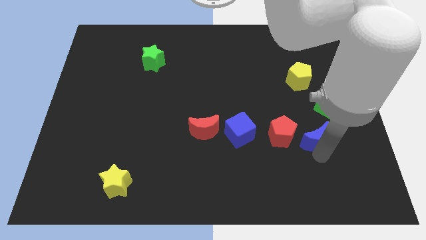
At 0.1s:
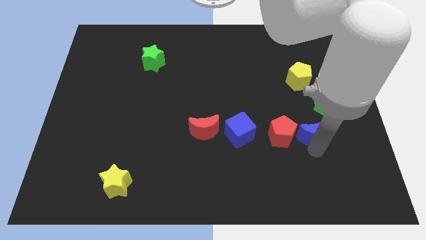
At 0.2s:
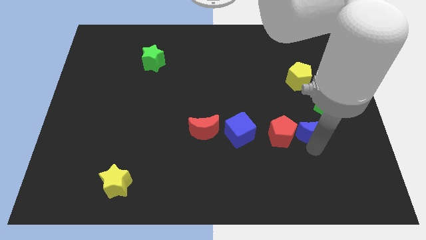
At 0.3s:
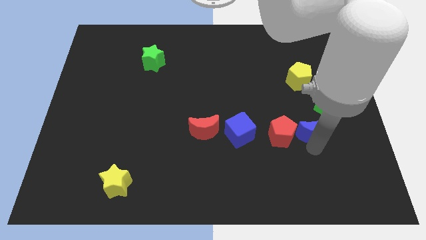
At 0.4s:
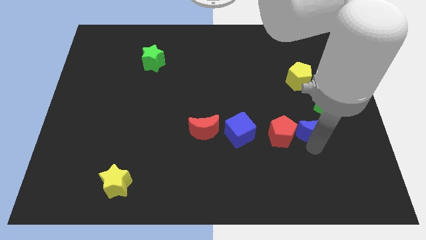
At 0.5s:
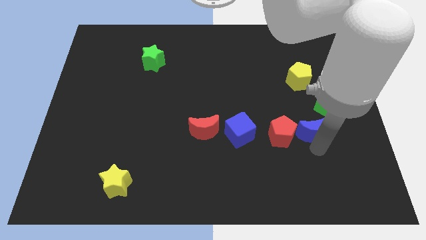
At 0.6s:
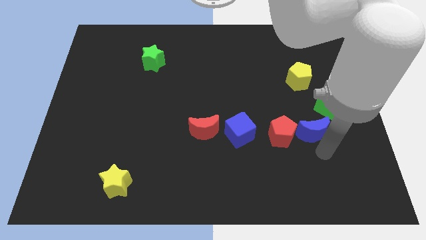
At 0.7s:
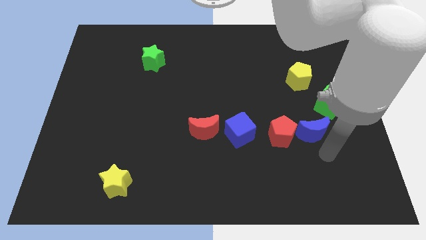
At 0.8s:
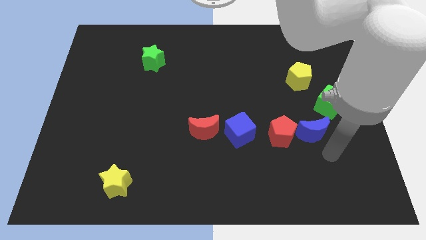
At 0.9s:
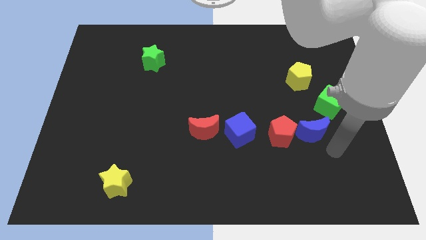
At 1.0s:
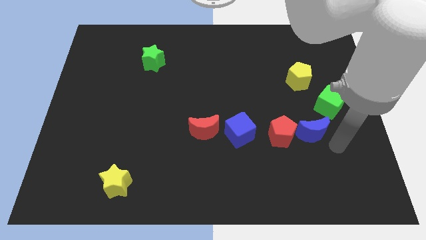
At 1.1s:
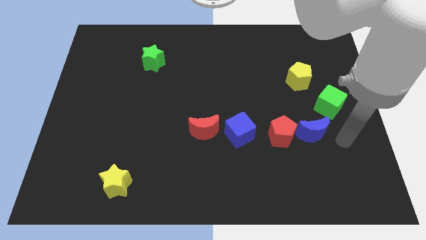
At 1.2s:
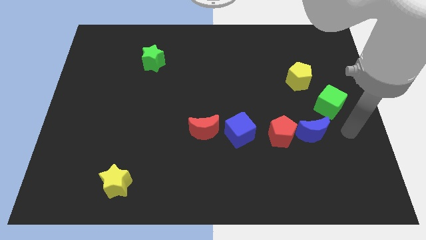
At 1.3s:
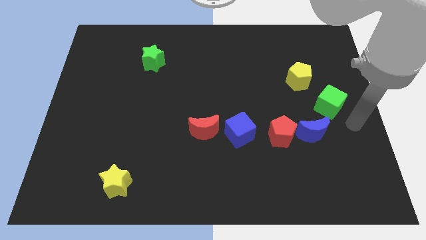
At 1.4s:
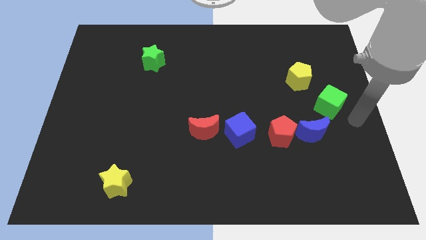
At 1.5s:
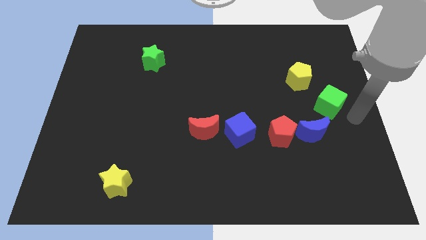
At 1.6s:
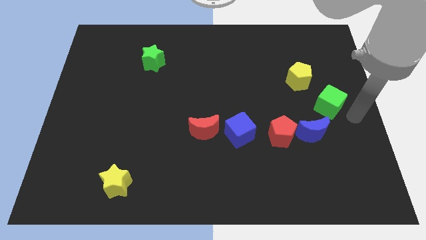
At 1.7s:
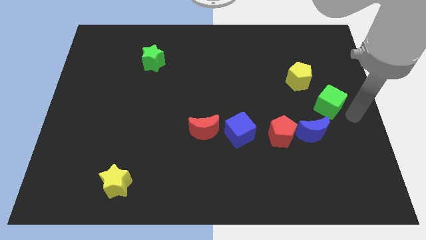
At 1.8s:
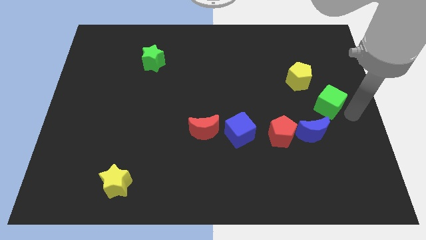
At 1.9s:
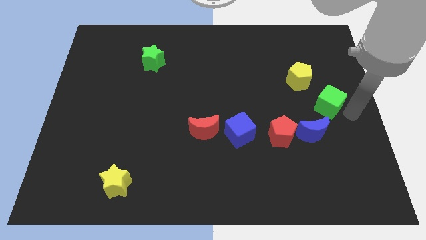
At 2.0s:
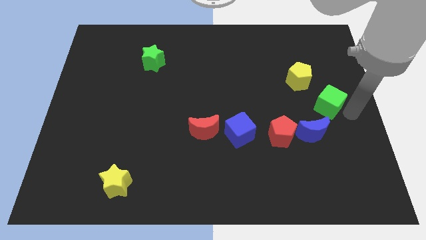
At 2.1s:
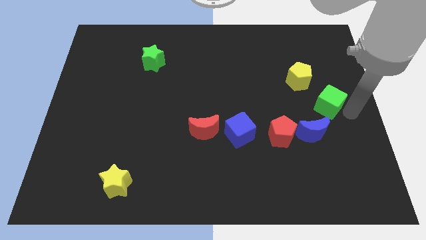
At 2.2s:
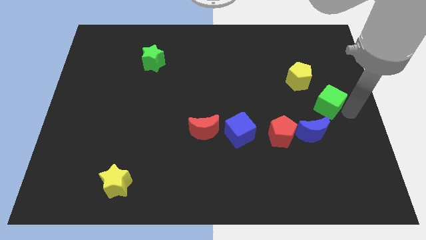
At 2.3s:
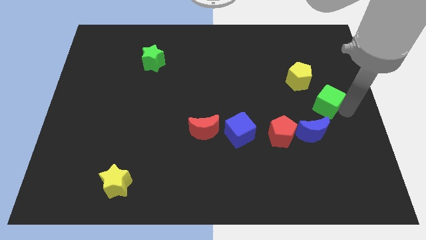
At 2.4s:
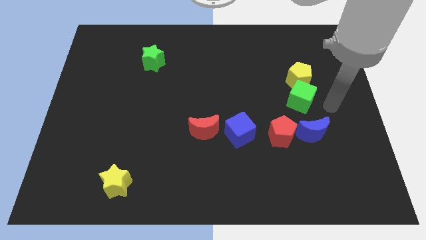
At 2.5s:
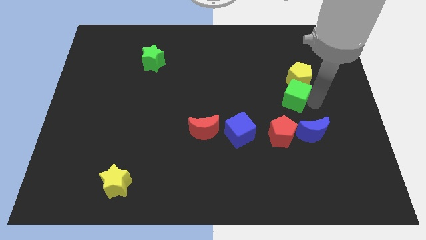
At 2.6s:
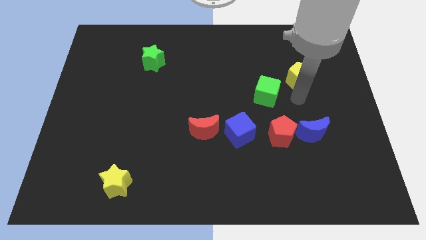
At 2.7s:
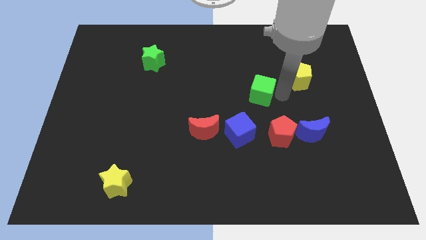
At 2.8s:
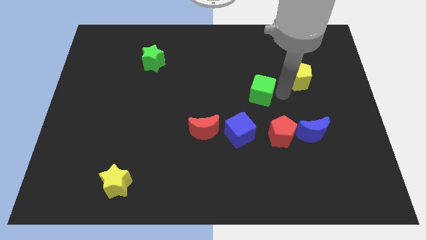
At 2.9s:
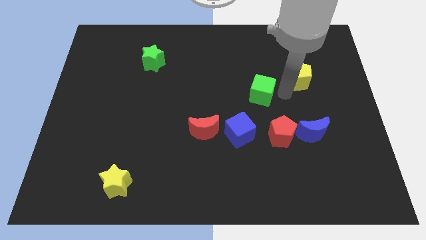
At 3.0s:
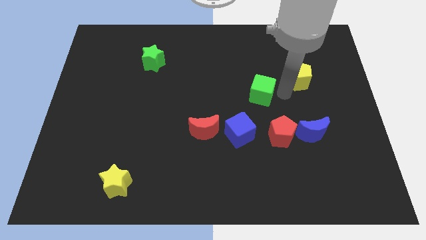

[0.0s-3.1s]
separate green cube from blue moon

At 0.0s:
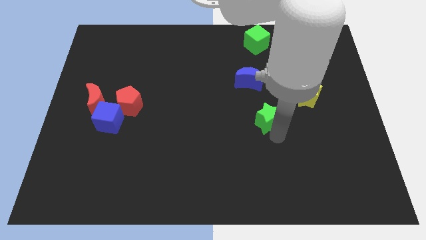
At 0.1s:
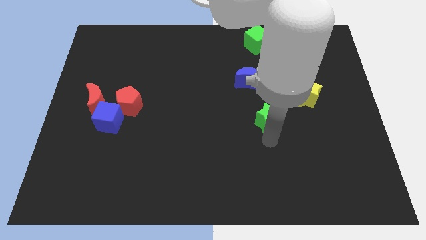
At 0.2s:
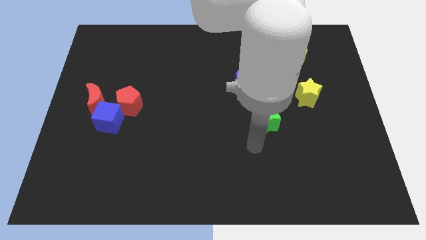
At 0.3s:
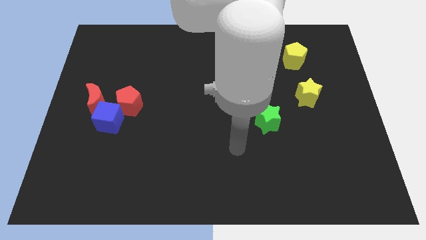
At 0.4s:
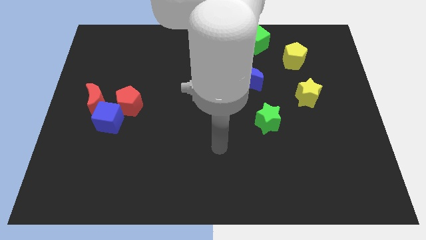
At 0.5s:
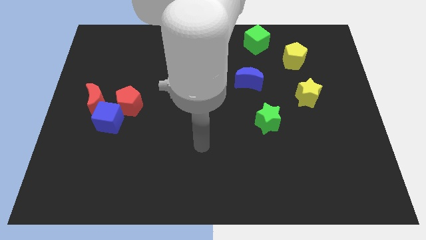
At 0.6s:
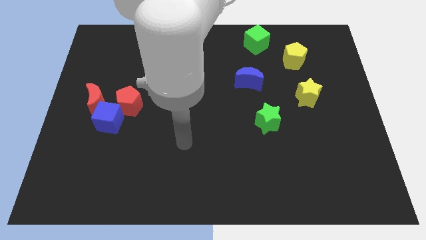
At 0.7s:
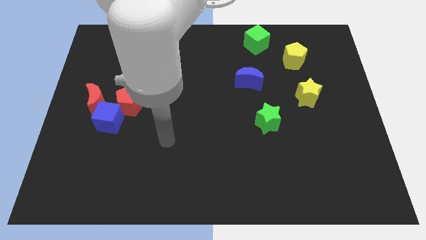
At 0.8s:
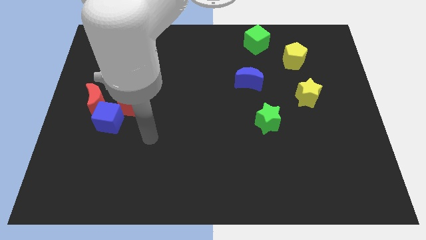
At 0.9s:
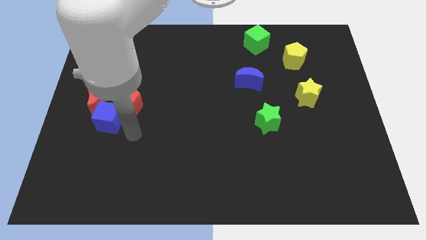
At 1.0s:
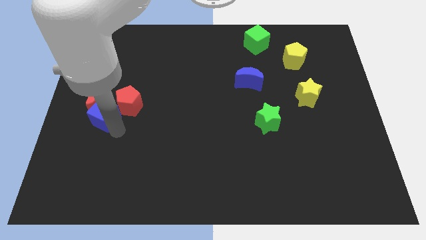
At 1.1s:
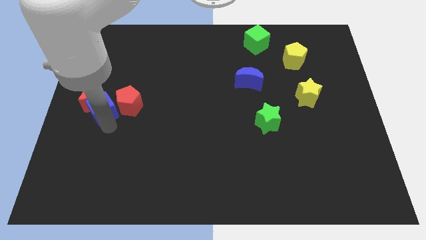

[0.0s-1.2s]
move your arm away from green star

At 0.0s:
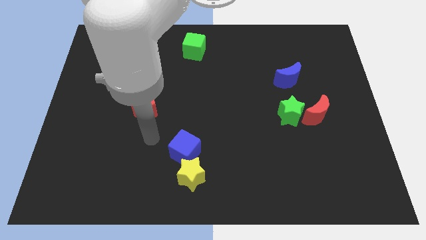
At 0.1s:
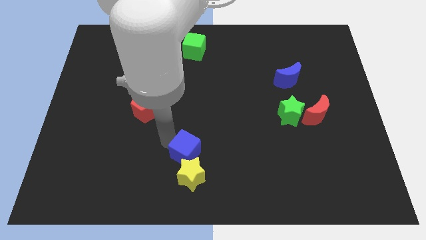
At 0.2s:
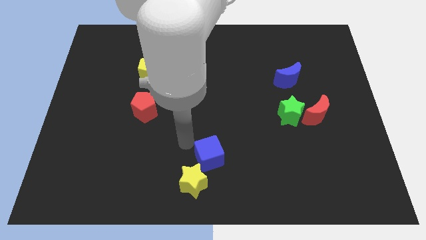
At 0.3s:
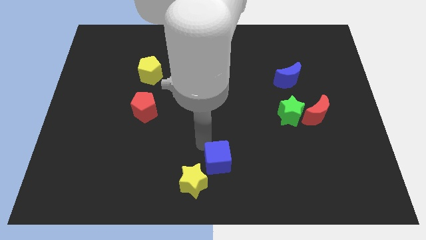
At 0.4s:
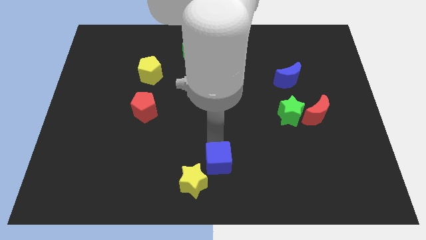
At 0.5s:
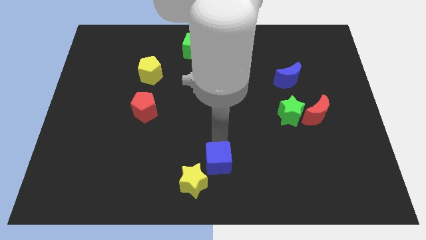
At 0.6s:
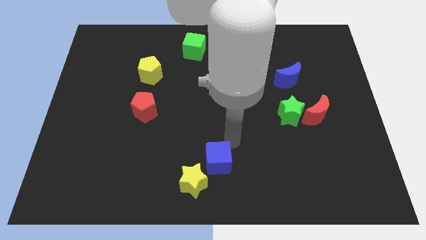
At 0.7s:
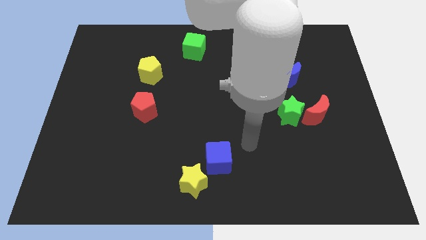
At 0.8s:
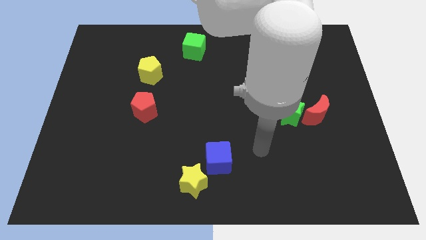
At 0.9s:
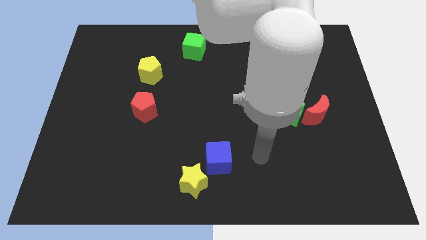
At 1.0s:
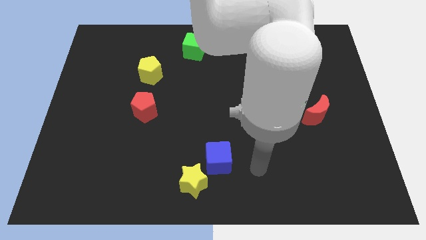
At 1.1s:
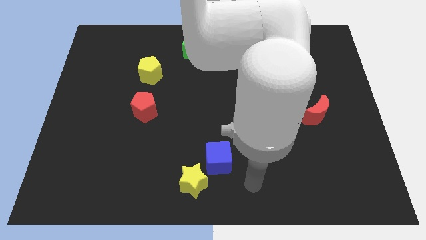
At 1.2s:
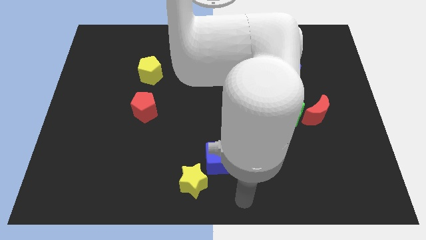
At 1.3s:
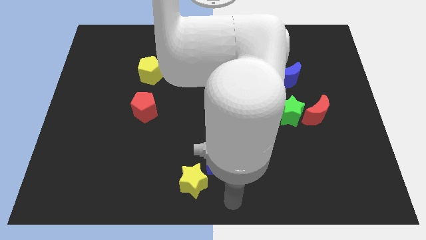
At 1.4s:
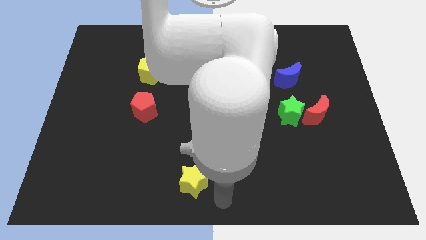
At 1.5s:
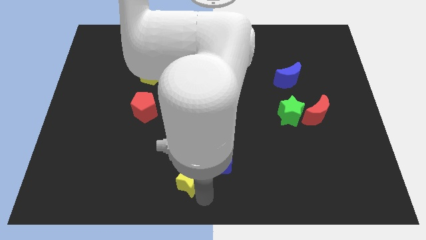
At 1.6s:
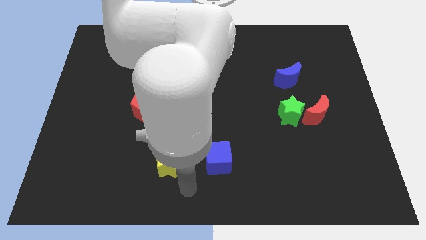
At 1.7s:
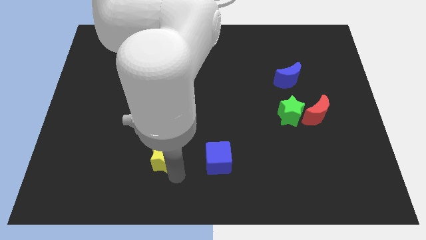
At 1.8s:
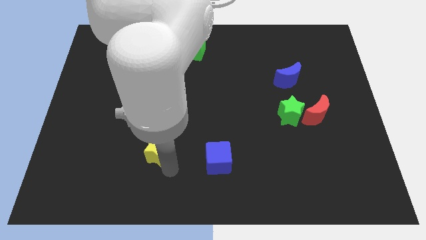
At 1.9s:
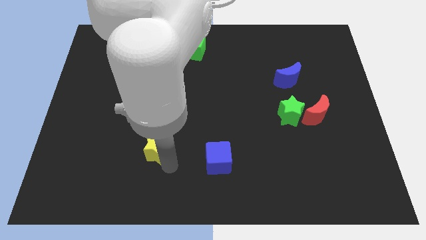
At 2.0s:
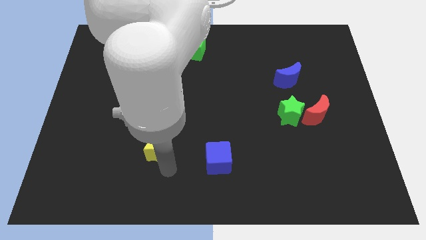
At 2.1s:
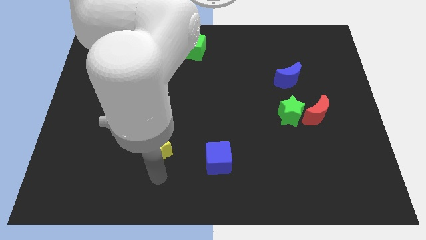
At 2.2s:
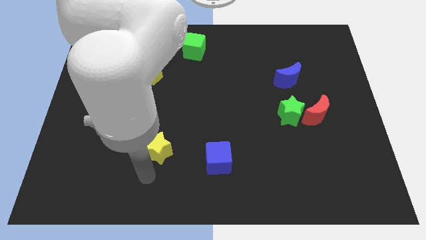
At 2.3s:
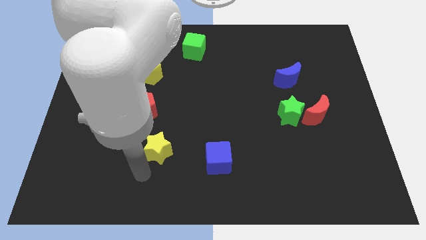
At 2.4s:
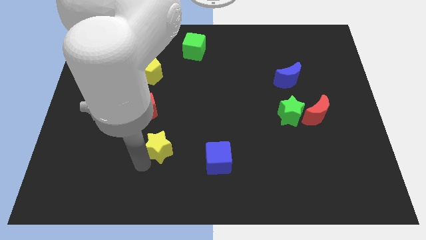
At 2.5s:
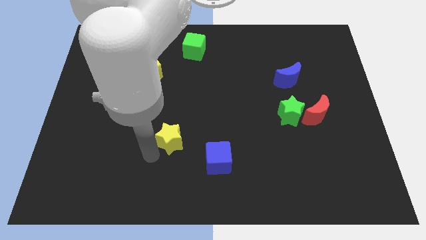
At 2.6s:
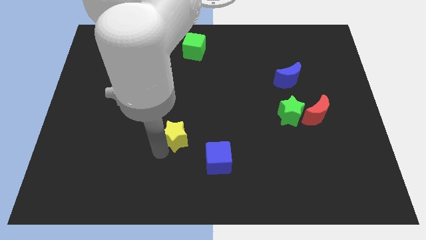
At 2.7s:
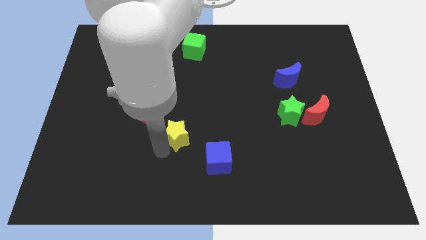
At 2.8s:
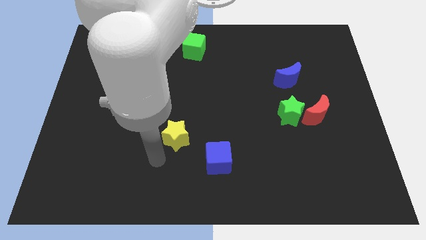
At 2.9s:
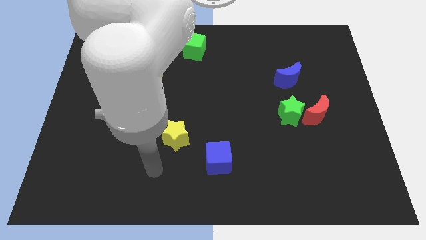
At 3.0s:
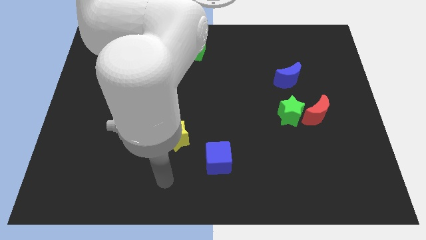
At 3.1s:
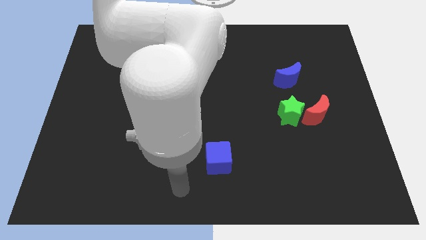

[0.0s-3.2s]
slide the yellow star in between blue cube and red pentagon

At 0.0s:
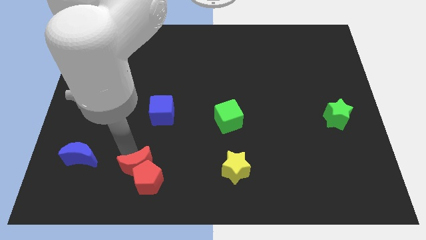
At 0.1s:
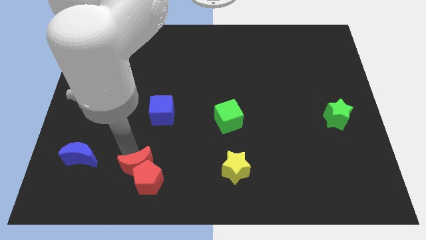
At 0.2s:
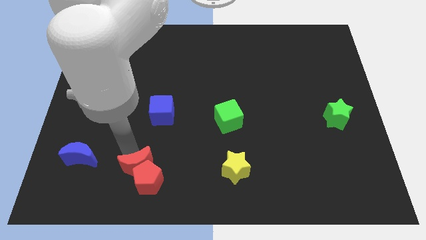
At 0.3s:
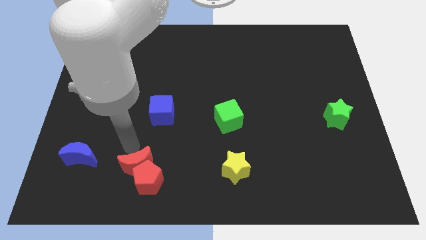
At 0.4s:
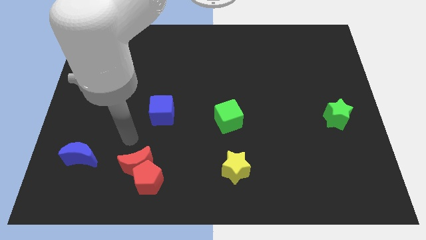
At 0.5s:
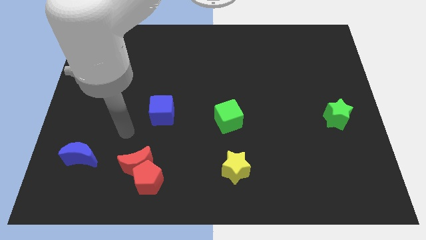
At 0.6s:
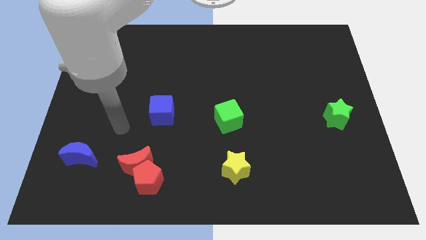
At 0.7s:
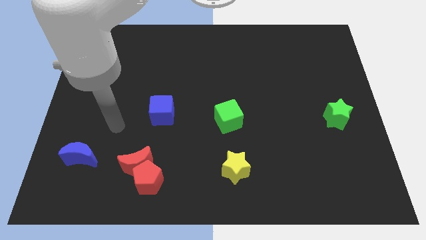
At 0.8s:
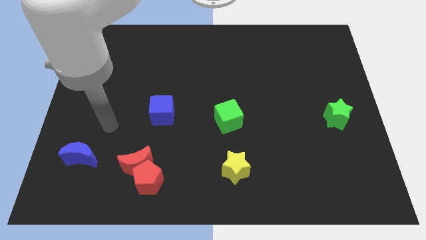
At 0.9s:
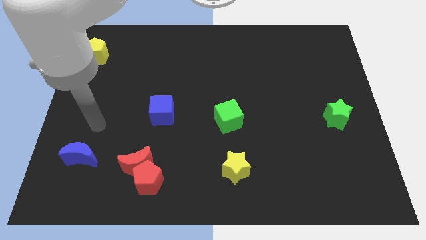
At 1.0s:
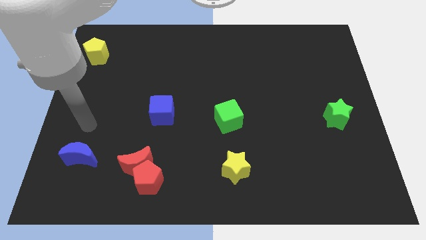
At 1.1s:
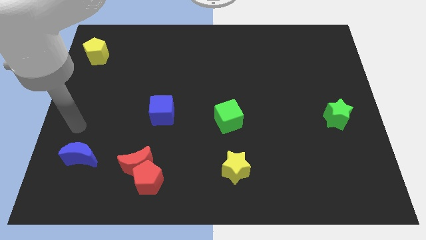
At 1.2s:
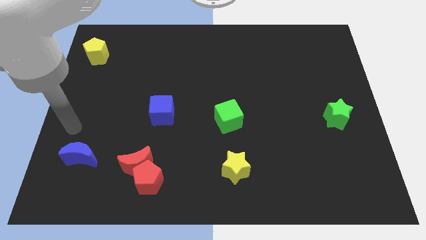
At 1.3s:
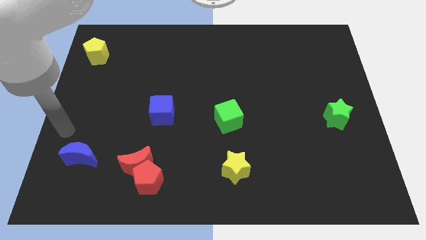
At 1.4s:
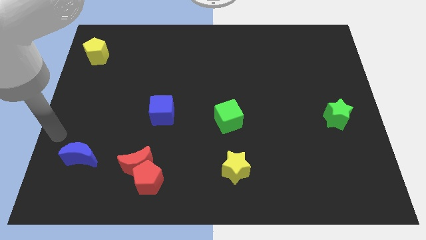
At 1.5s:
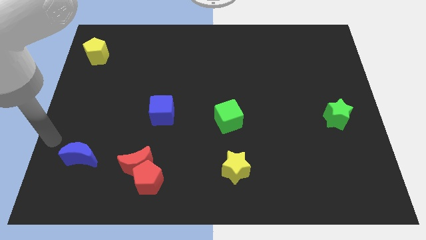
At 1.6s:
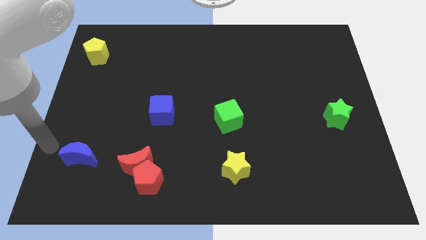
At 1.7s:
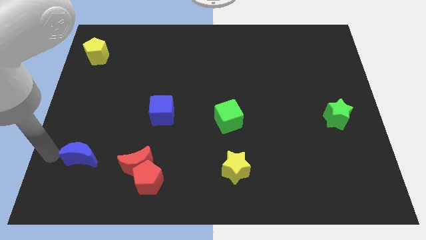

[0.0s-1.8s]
move away from the red crescent
